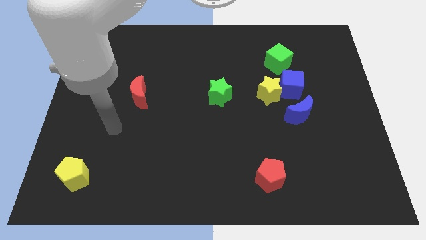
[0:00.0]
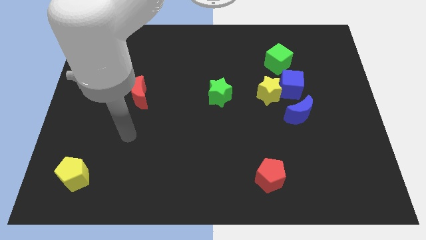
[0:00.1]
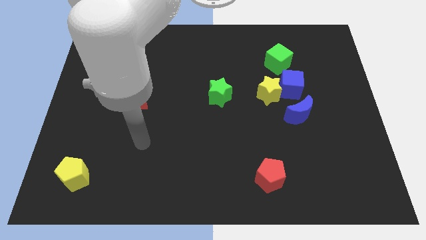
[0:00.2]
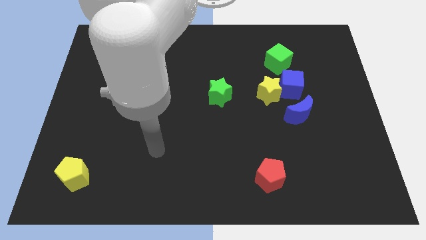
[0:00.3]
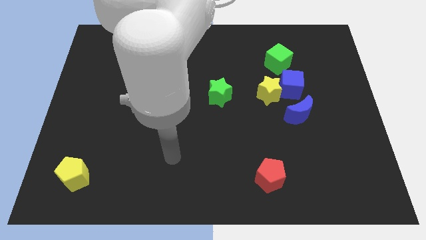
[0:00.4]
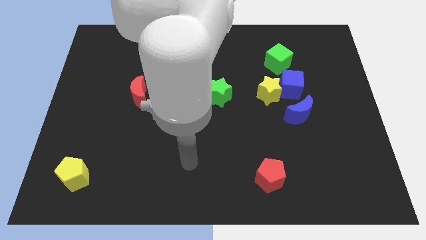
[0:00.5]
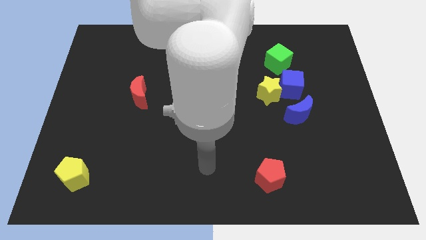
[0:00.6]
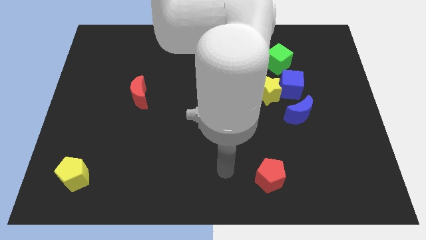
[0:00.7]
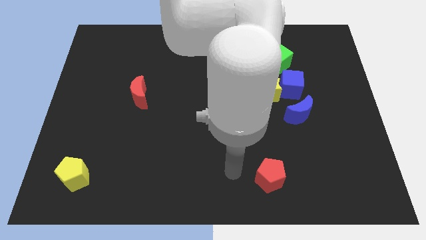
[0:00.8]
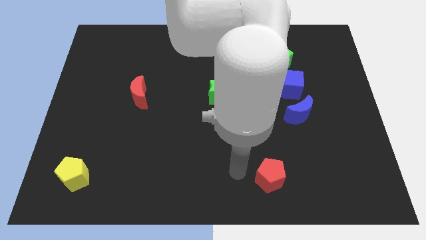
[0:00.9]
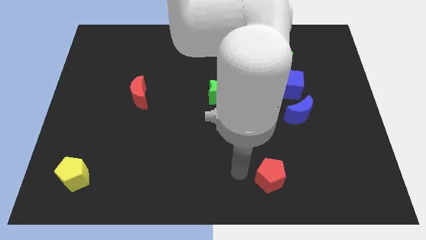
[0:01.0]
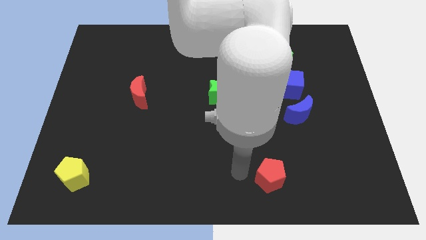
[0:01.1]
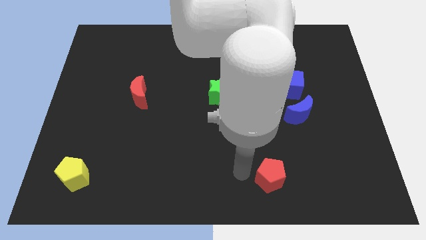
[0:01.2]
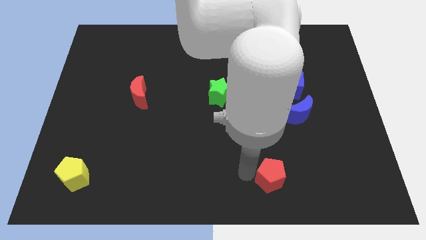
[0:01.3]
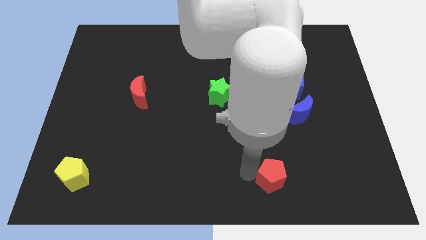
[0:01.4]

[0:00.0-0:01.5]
move your arm left to the red pentagon

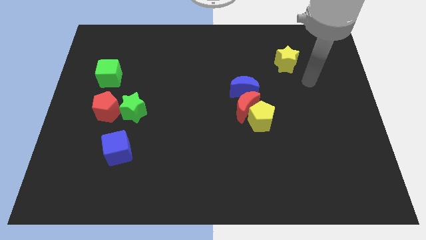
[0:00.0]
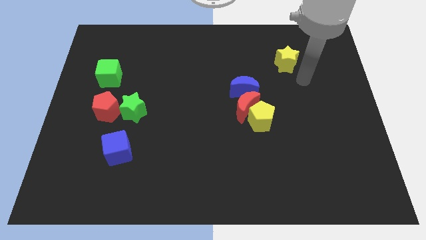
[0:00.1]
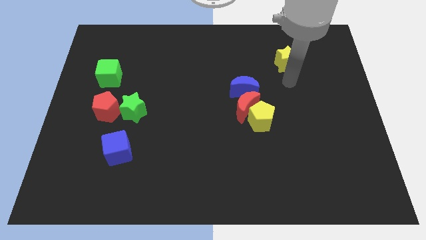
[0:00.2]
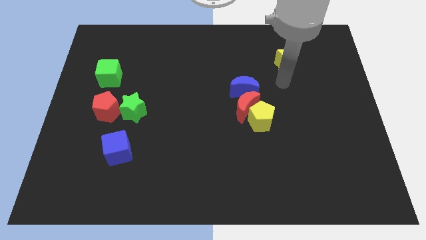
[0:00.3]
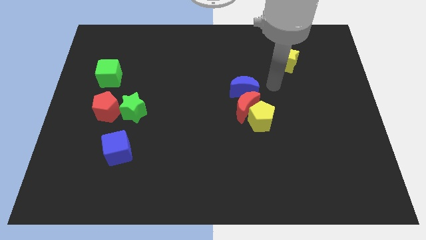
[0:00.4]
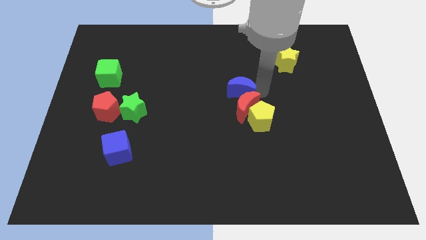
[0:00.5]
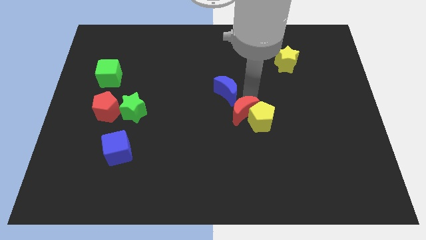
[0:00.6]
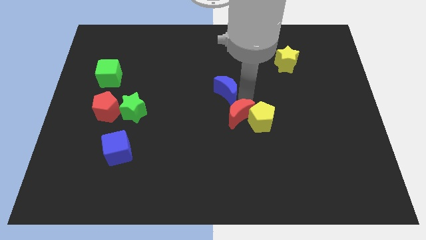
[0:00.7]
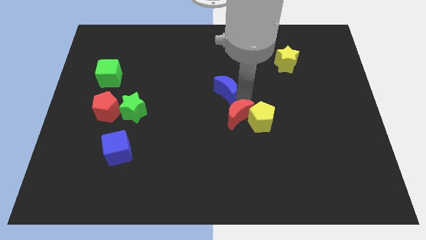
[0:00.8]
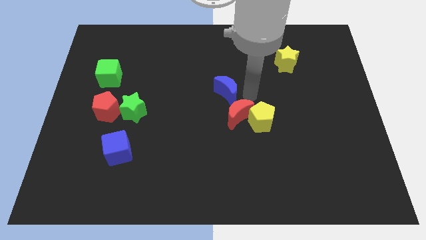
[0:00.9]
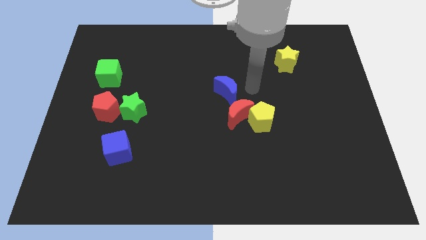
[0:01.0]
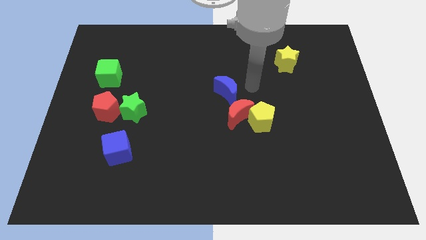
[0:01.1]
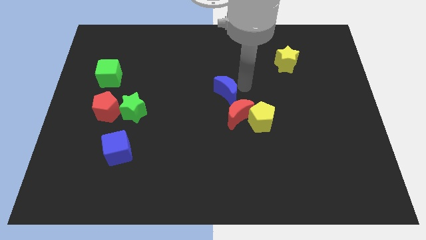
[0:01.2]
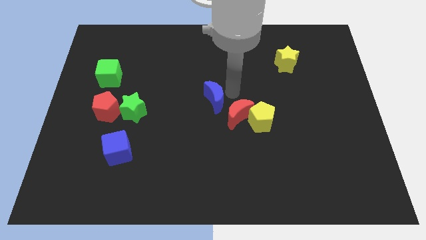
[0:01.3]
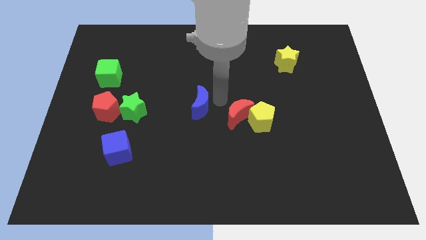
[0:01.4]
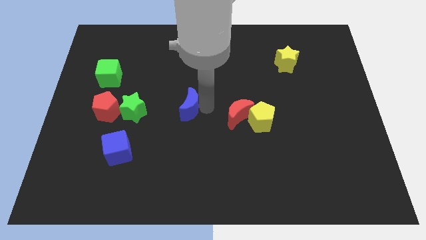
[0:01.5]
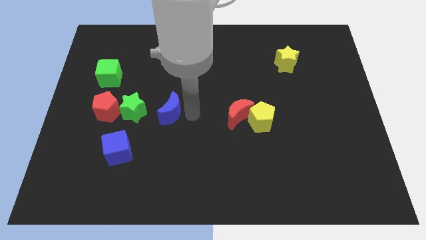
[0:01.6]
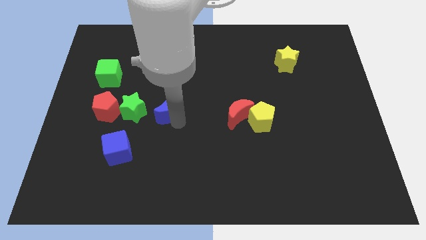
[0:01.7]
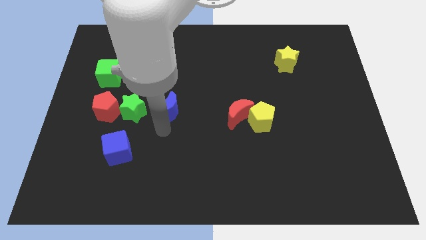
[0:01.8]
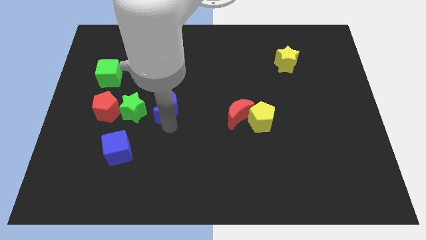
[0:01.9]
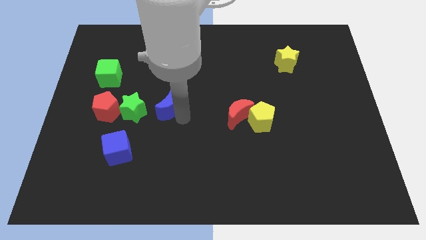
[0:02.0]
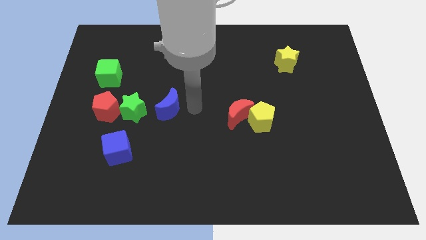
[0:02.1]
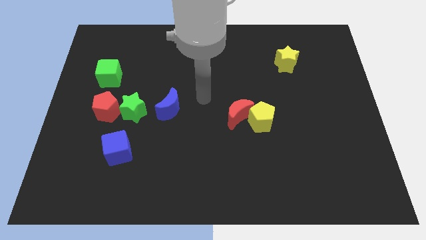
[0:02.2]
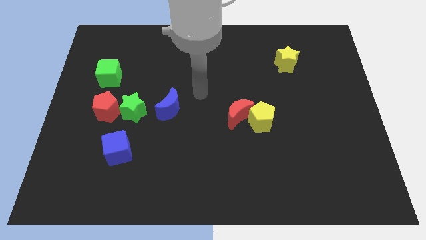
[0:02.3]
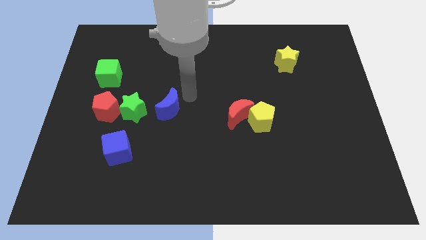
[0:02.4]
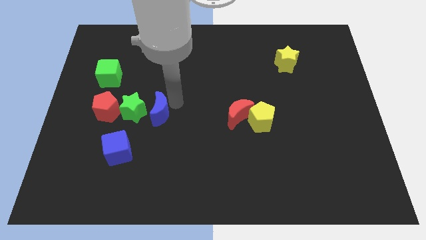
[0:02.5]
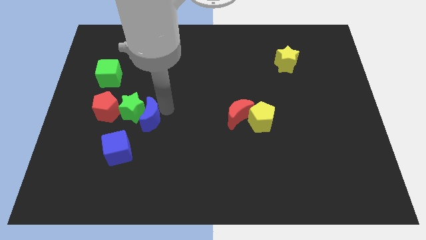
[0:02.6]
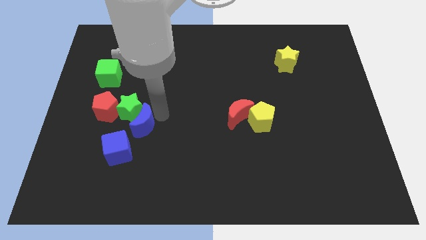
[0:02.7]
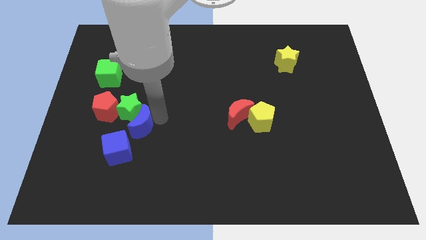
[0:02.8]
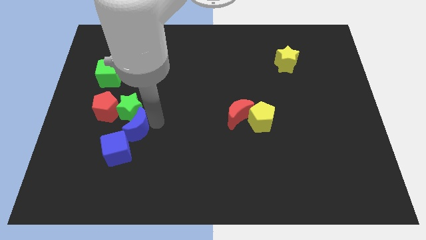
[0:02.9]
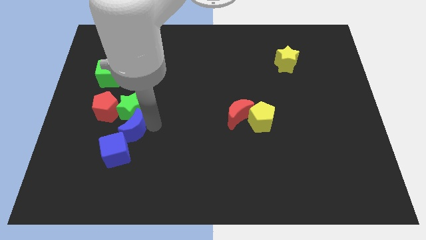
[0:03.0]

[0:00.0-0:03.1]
separate blue moon from red moon

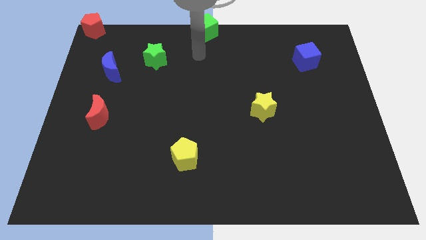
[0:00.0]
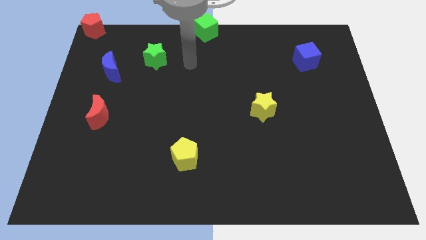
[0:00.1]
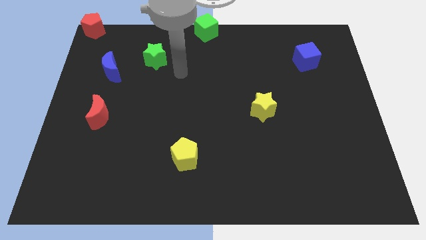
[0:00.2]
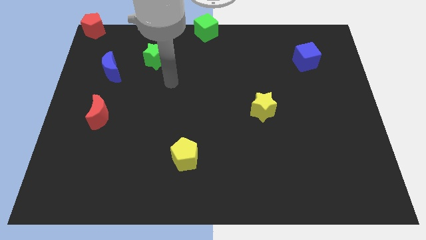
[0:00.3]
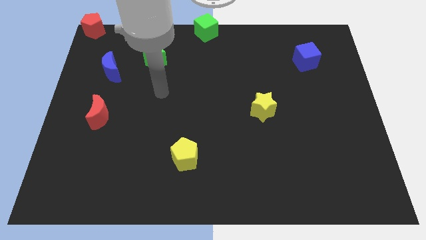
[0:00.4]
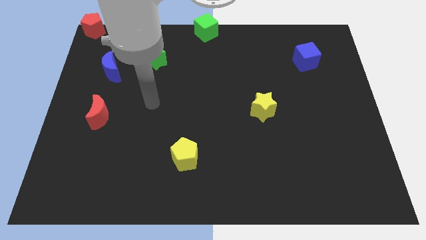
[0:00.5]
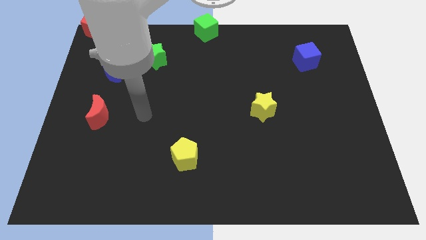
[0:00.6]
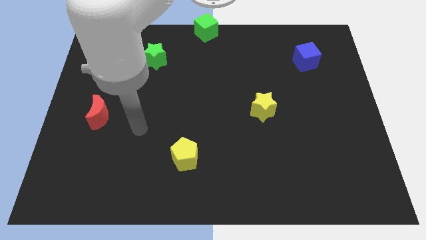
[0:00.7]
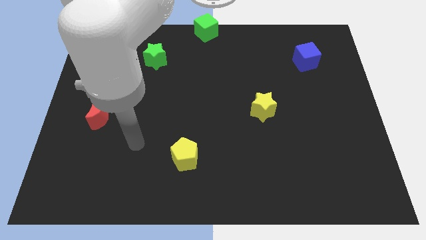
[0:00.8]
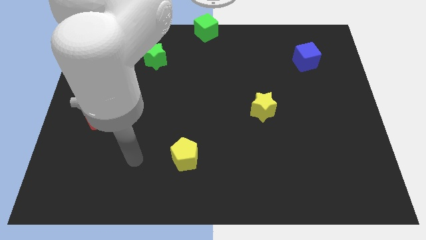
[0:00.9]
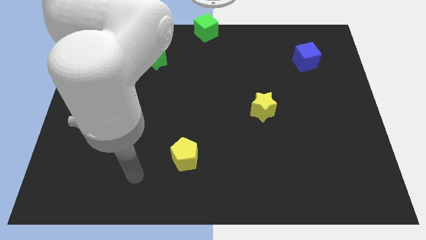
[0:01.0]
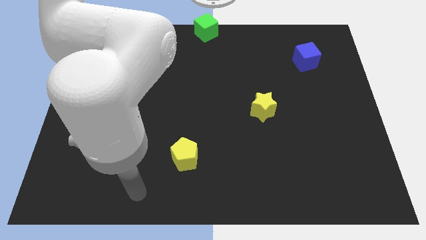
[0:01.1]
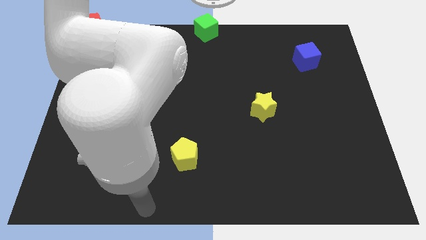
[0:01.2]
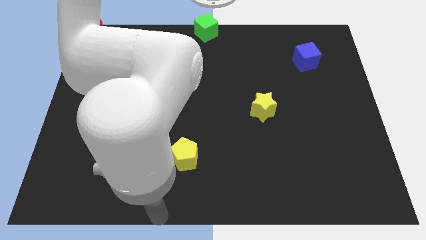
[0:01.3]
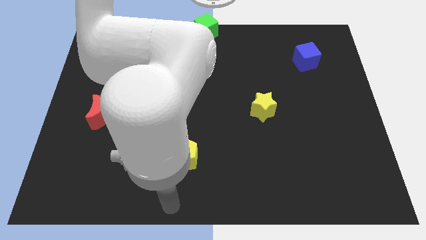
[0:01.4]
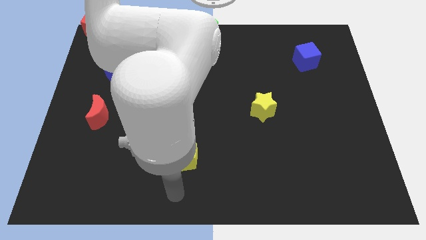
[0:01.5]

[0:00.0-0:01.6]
point the arm below the yellow pentagon

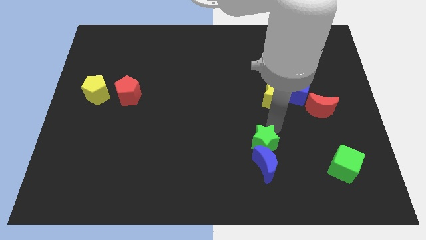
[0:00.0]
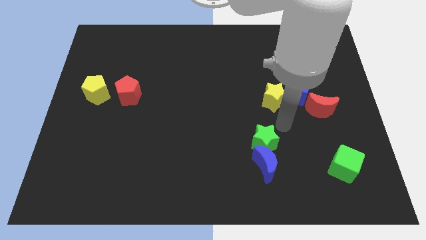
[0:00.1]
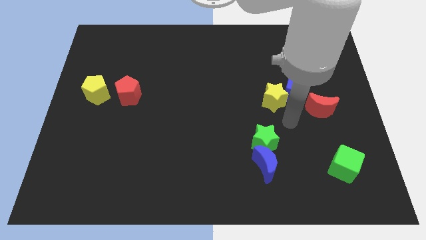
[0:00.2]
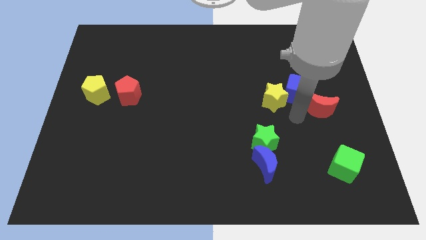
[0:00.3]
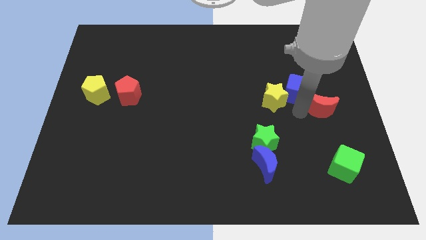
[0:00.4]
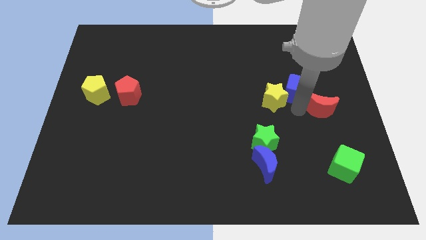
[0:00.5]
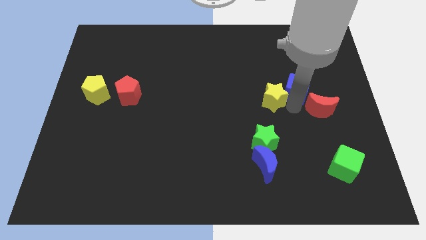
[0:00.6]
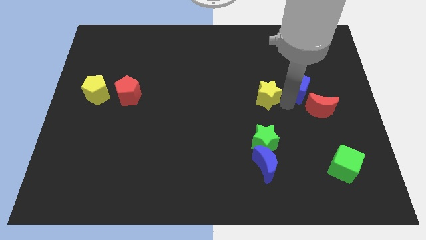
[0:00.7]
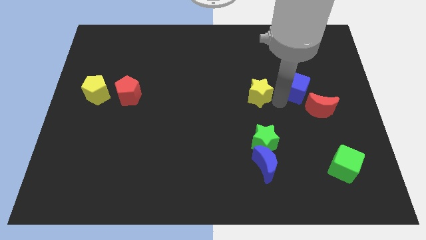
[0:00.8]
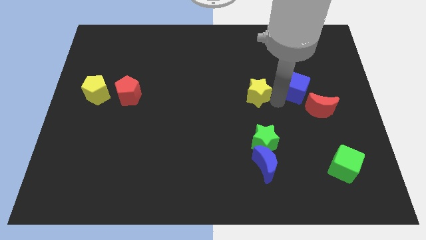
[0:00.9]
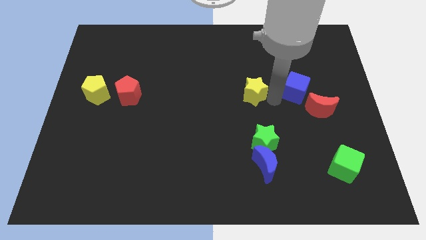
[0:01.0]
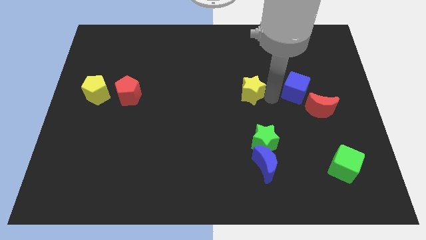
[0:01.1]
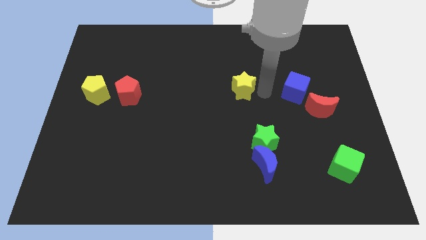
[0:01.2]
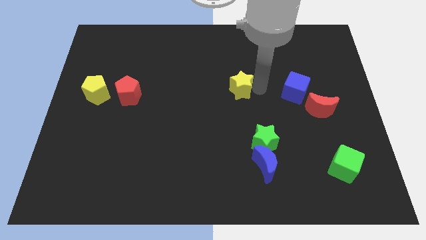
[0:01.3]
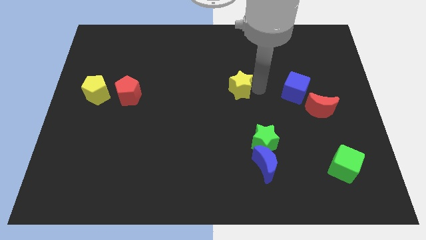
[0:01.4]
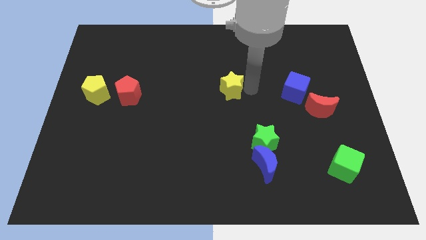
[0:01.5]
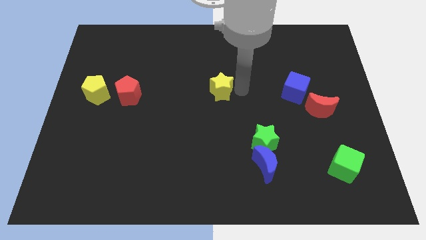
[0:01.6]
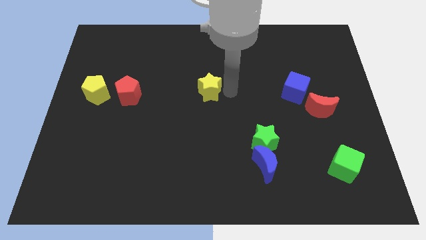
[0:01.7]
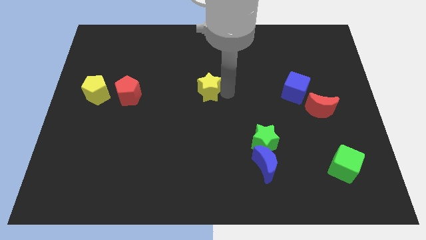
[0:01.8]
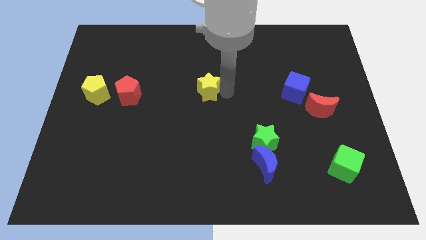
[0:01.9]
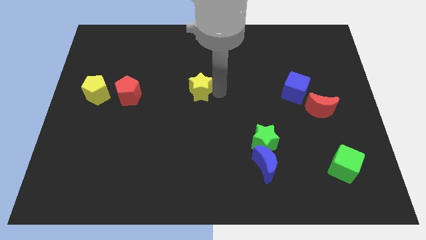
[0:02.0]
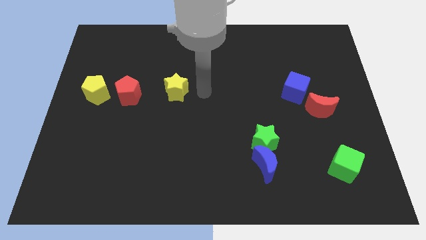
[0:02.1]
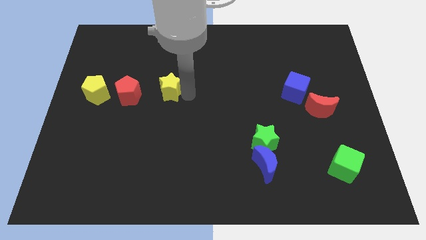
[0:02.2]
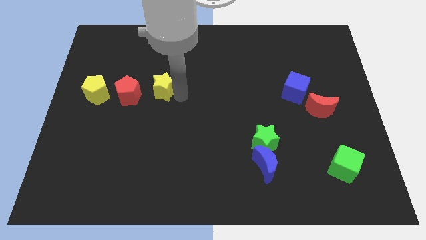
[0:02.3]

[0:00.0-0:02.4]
move the yellow star to the right side of the red pentagon

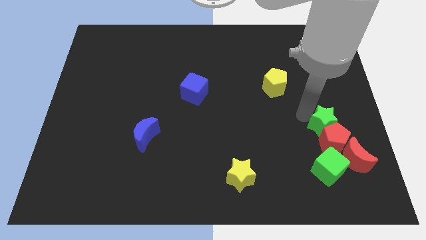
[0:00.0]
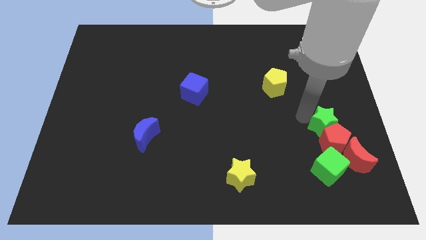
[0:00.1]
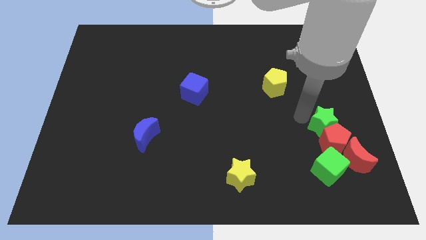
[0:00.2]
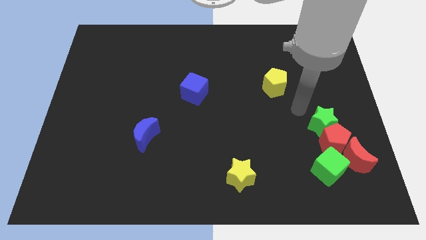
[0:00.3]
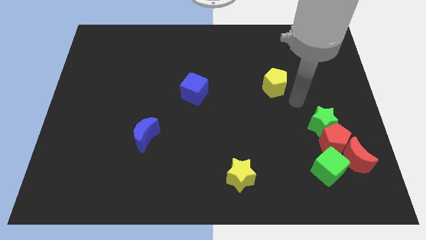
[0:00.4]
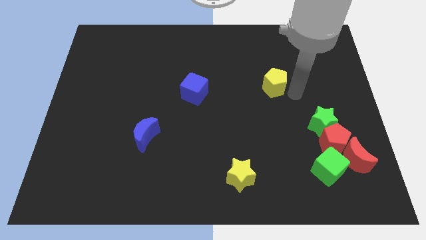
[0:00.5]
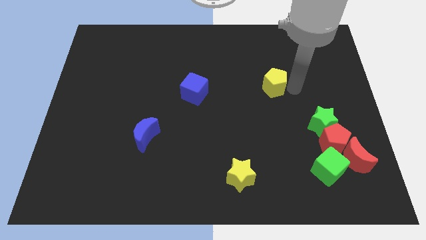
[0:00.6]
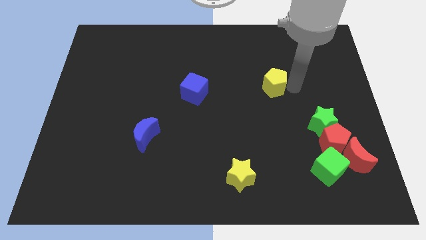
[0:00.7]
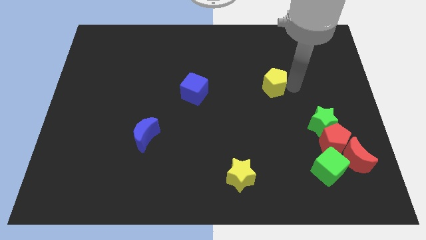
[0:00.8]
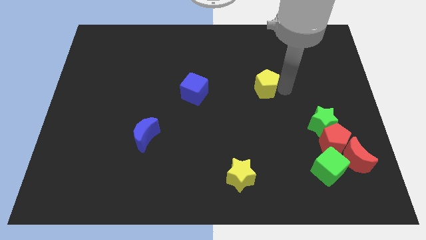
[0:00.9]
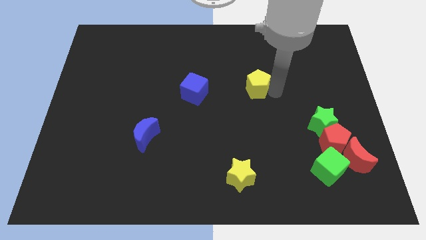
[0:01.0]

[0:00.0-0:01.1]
go away from the green star
